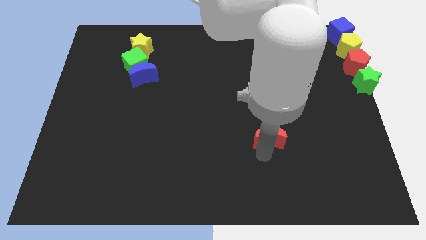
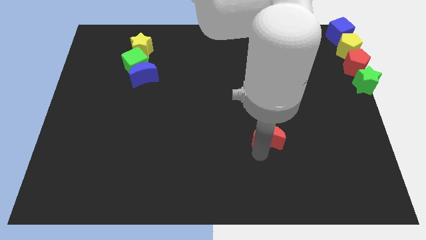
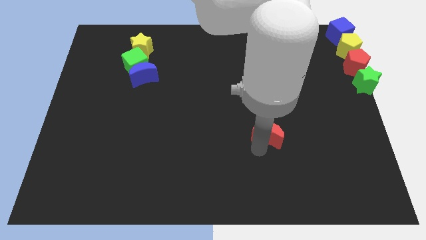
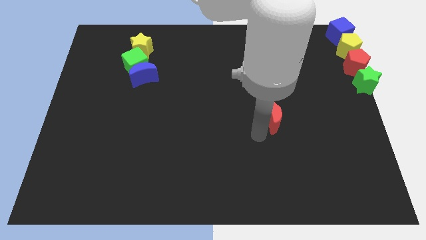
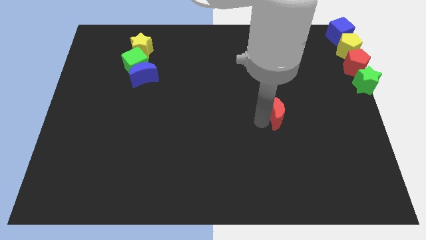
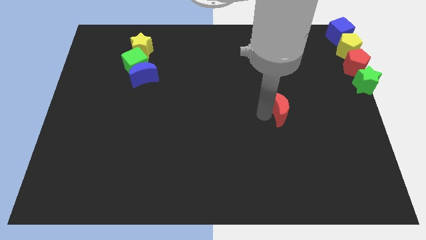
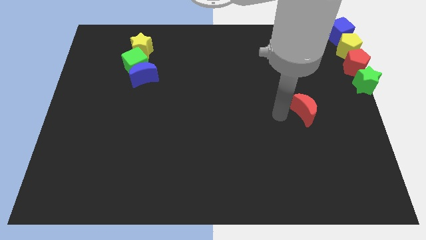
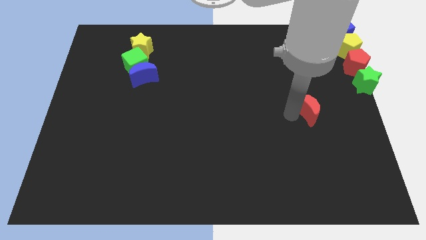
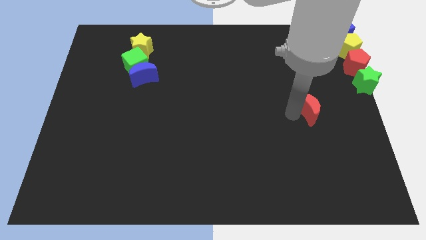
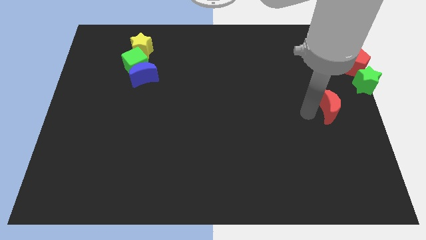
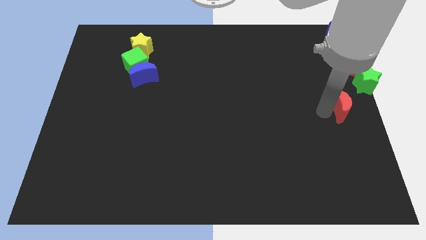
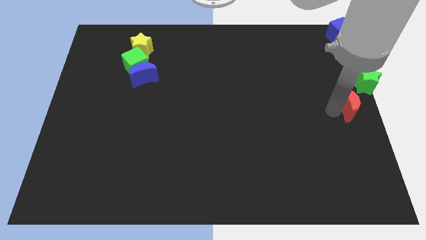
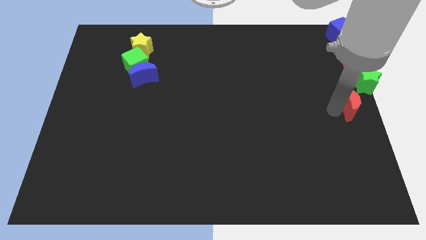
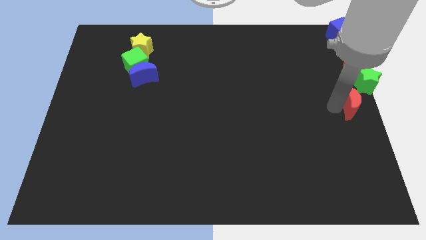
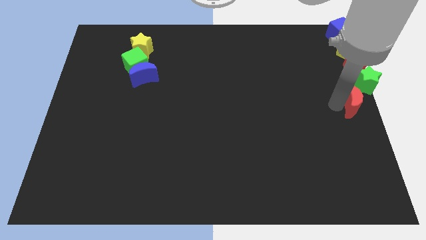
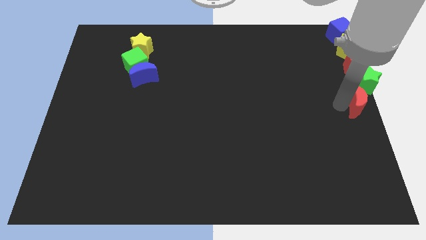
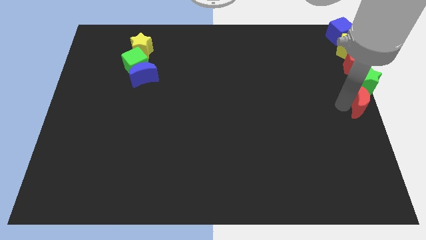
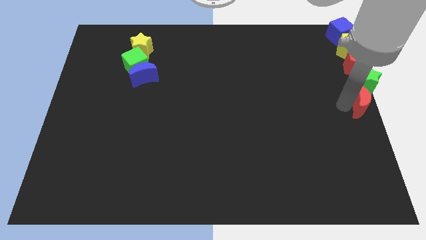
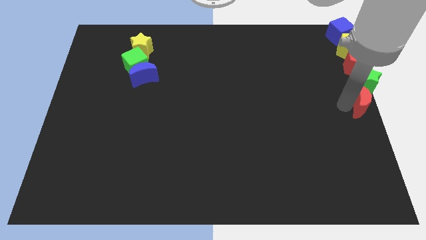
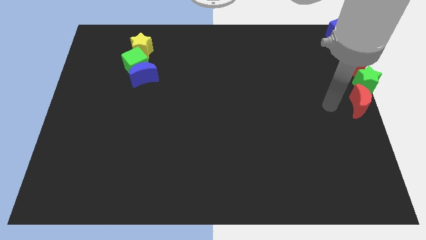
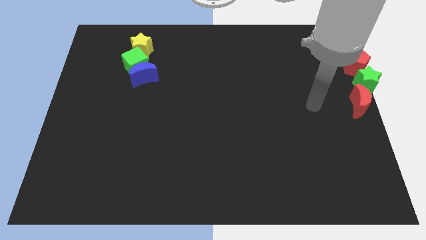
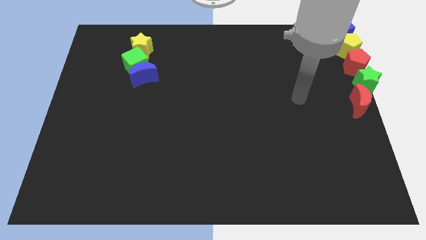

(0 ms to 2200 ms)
move the red crescent below the green star

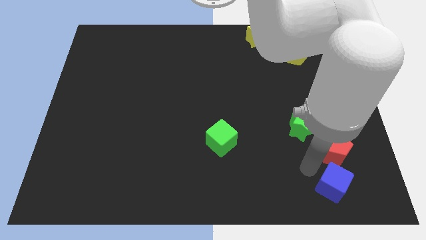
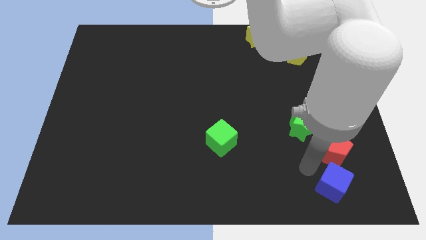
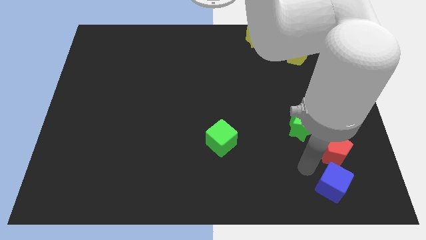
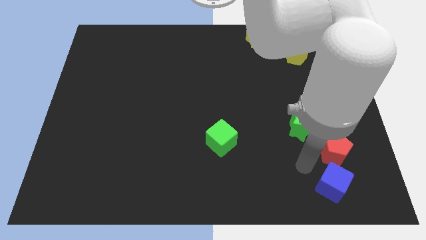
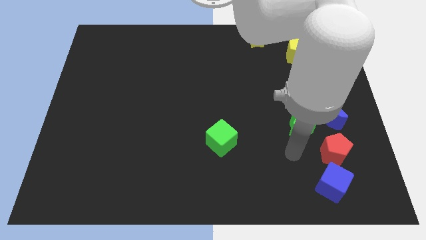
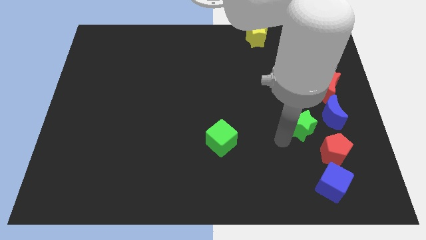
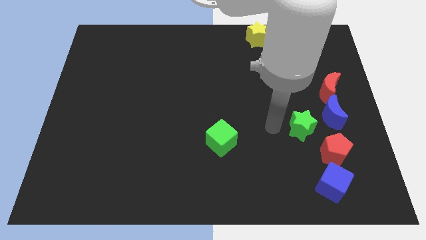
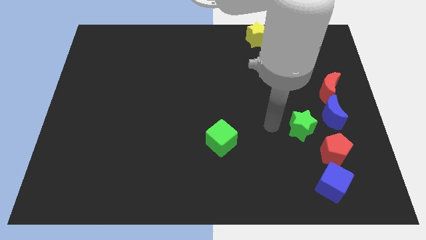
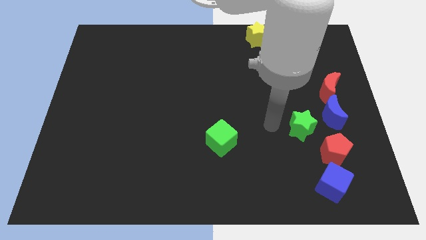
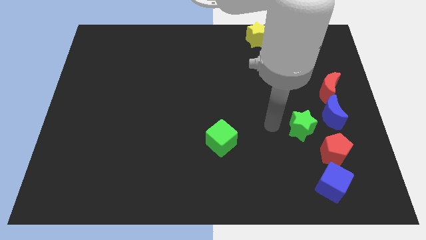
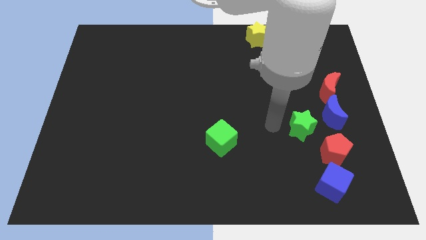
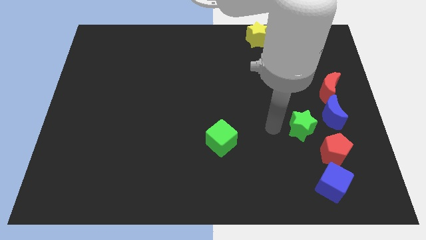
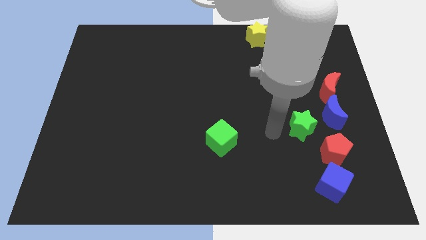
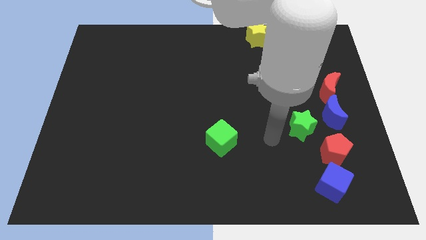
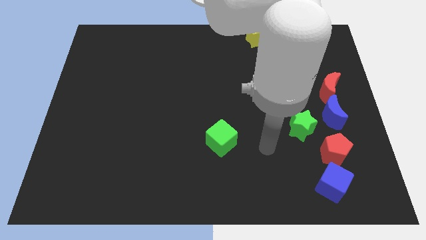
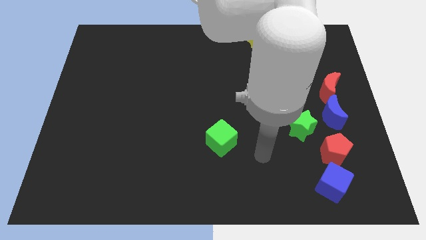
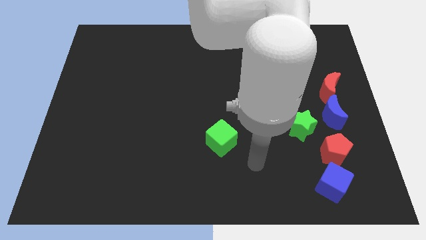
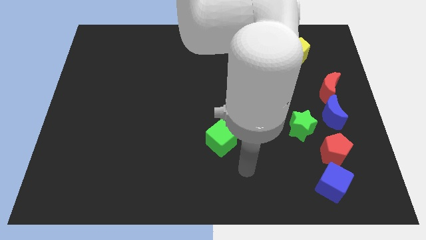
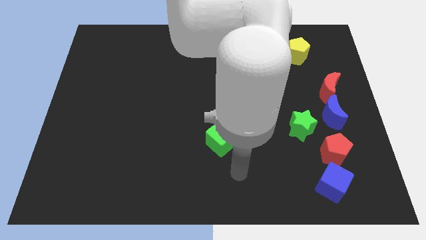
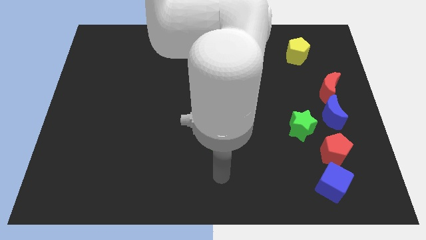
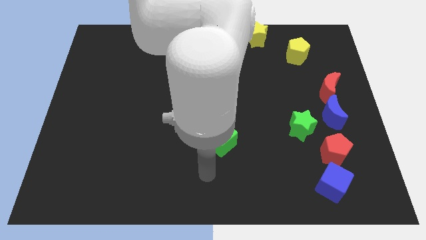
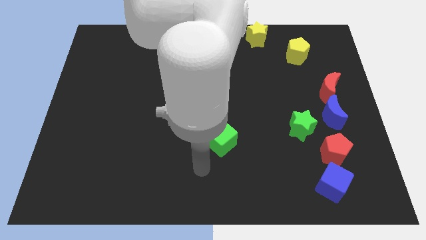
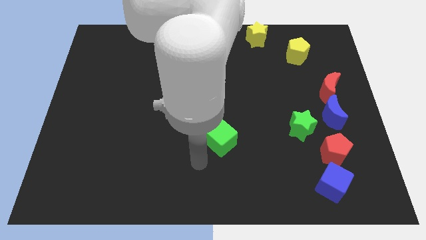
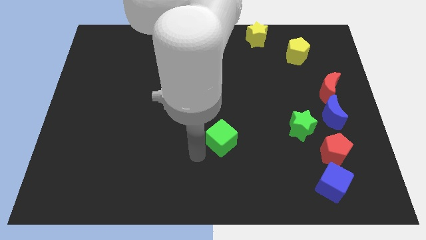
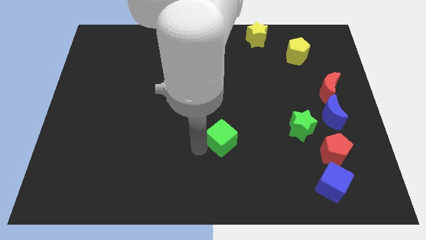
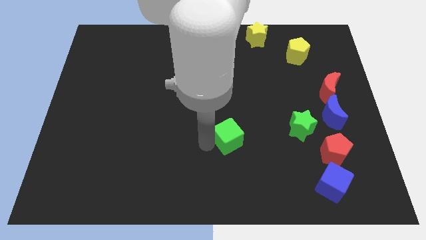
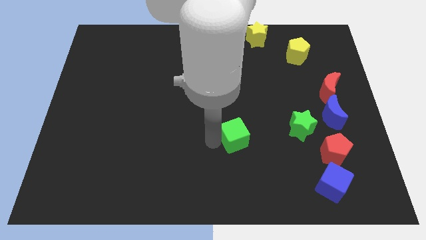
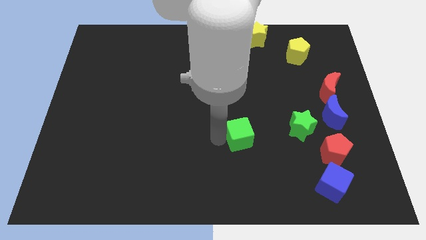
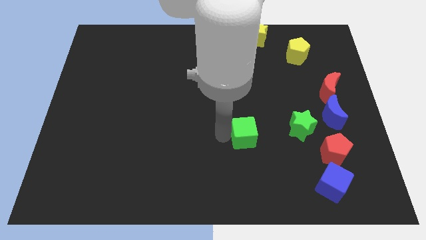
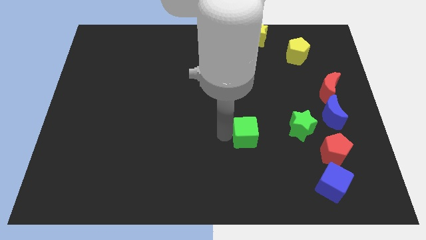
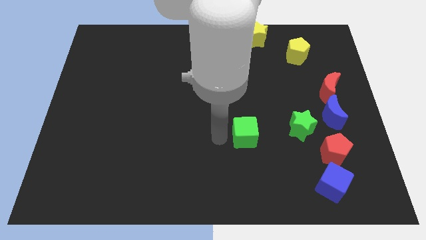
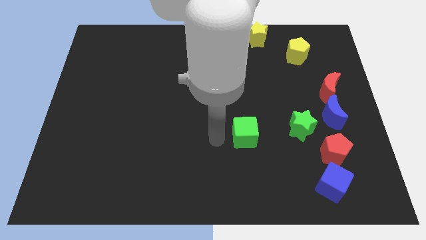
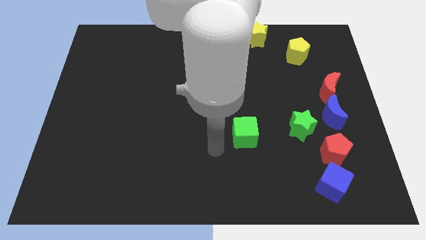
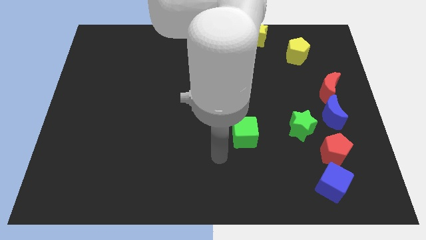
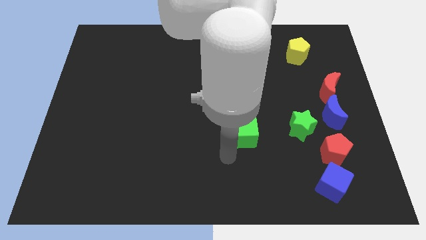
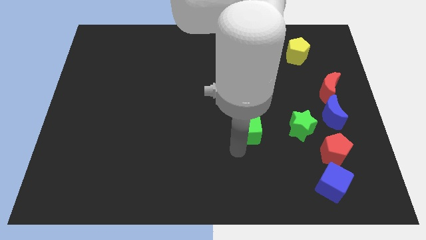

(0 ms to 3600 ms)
slide the green cube parallel to the green star

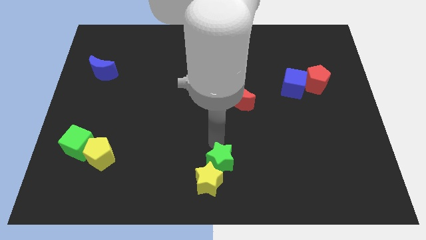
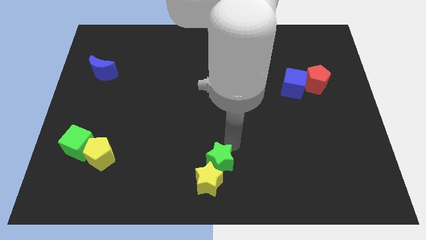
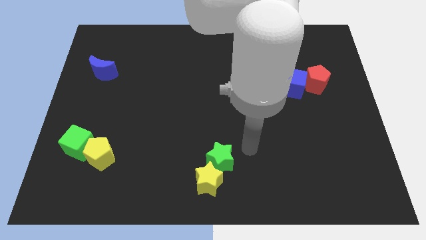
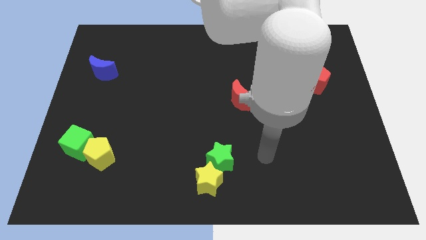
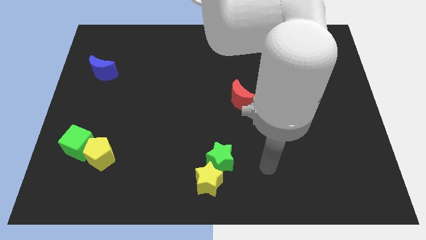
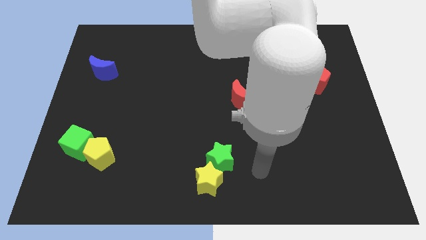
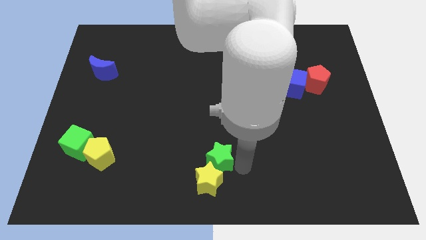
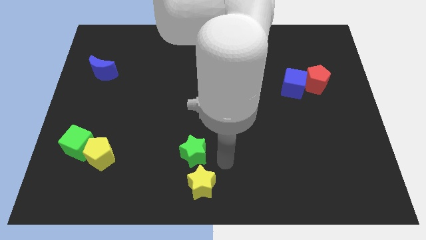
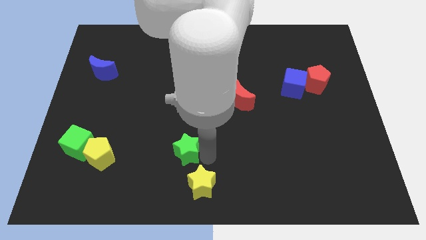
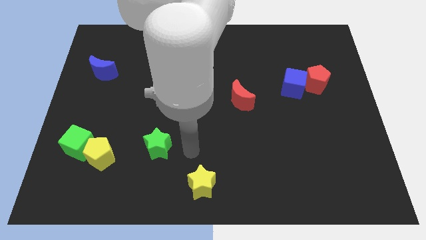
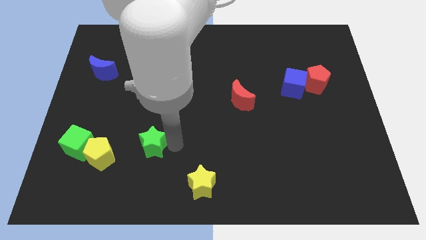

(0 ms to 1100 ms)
move the green star up slightly

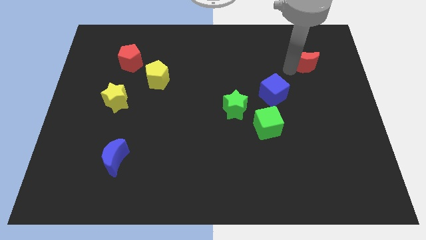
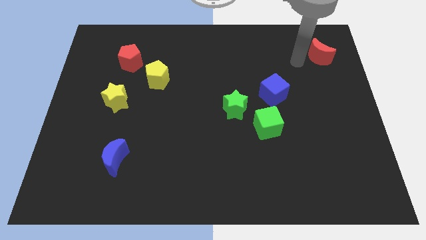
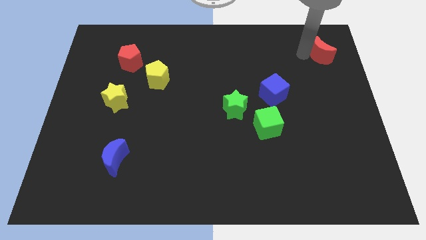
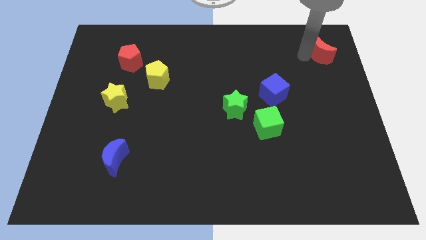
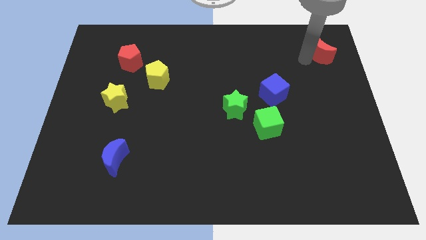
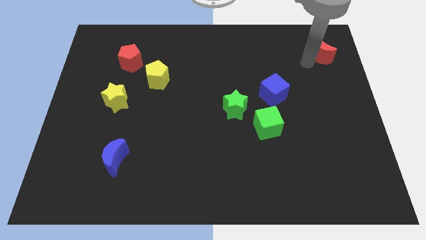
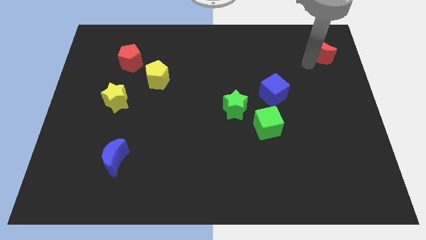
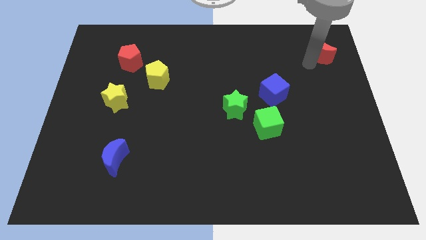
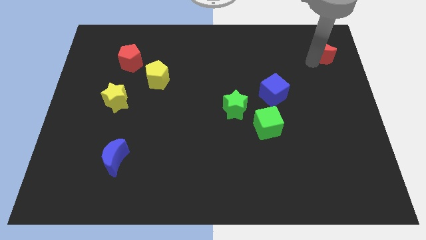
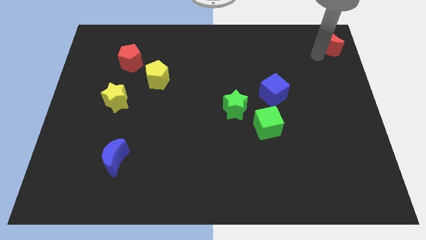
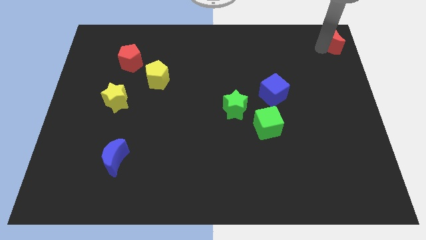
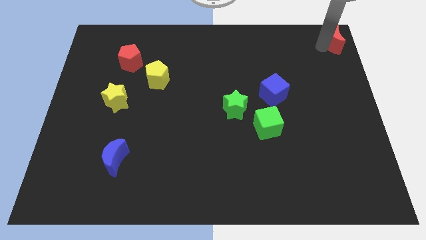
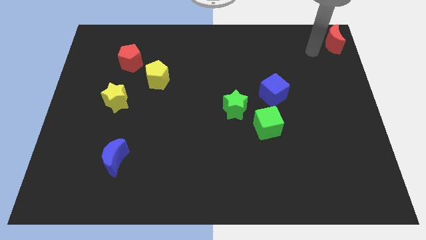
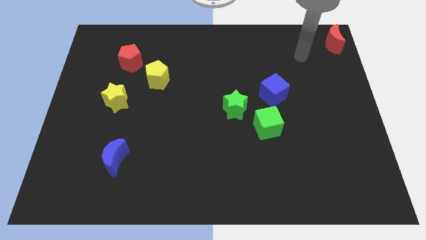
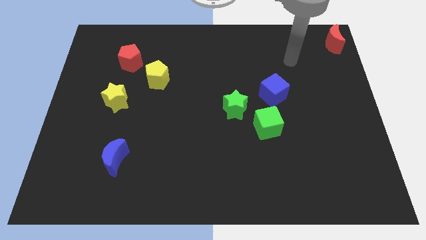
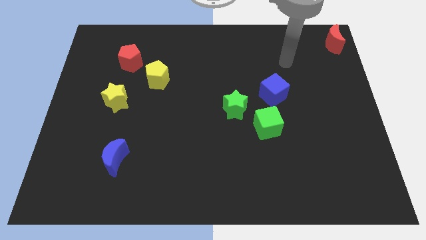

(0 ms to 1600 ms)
place the red moon at the top right corner of the board

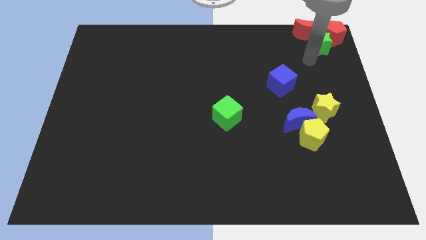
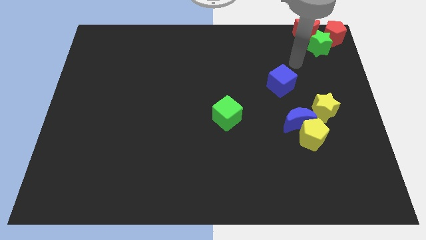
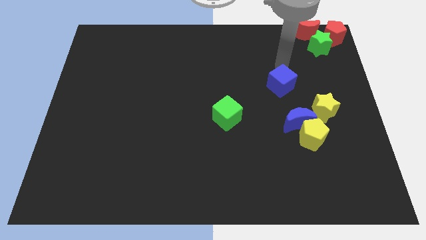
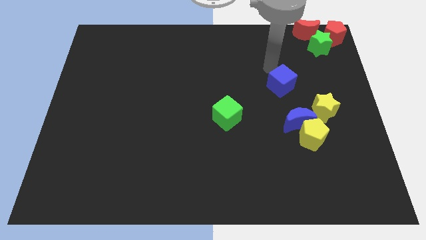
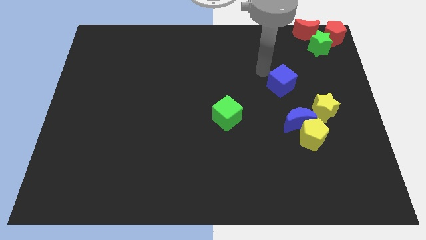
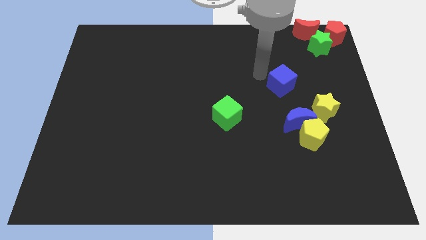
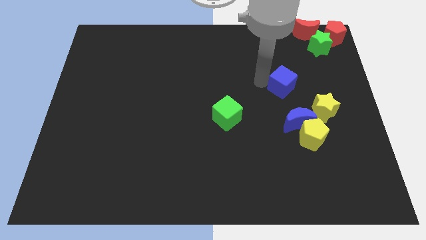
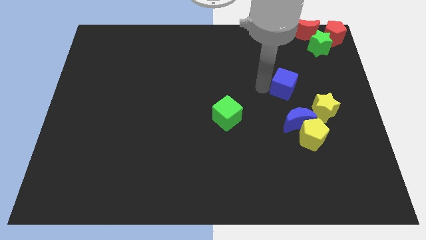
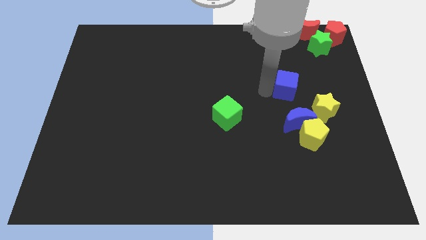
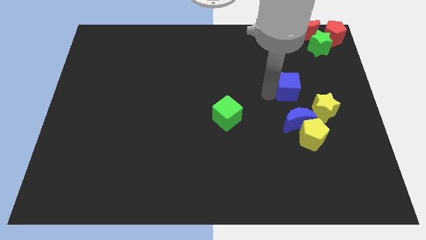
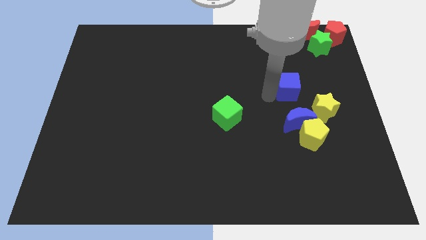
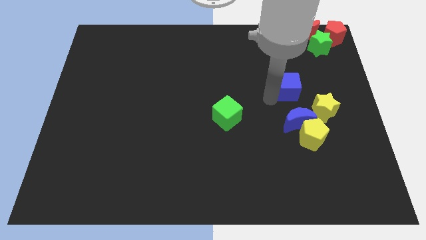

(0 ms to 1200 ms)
move the blue cube above to the blue crescent
